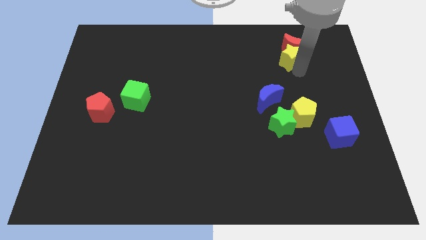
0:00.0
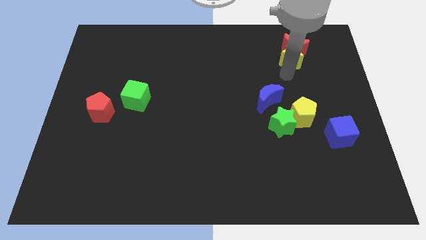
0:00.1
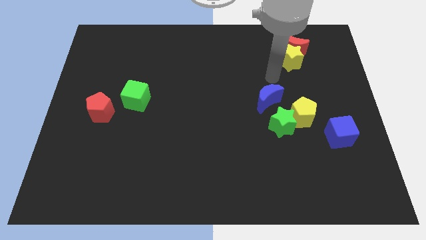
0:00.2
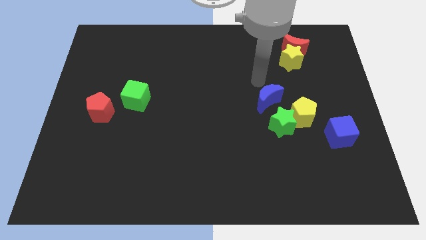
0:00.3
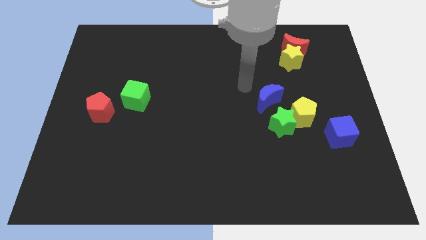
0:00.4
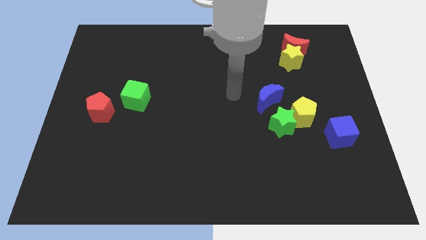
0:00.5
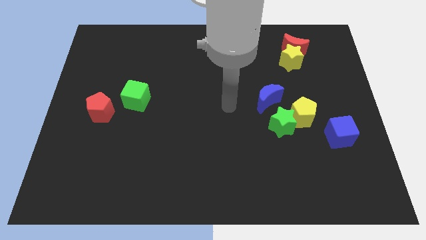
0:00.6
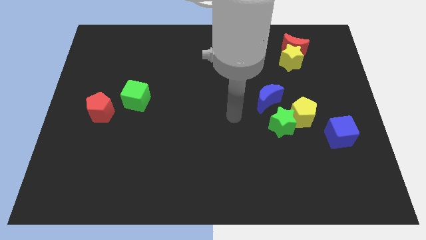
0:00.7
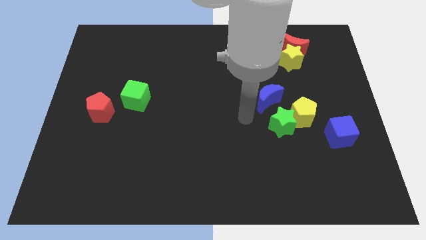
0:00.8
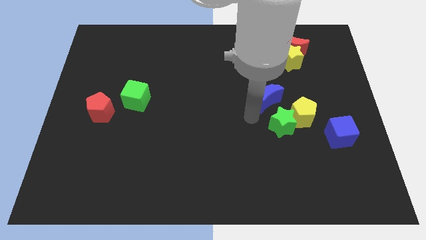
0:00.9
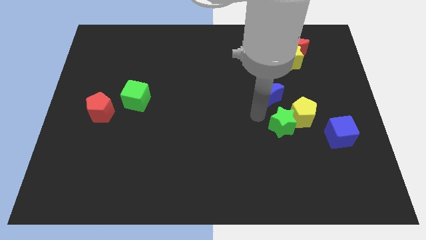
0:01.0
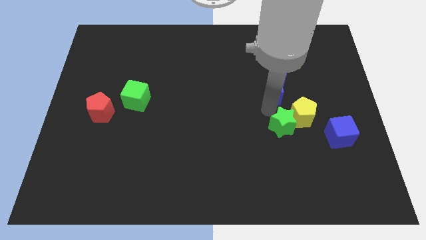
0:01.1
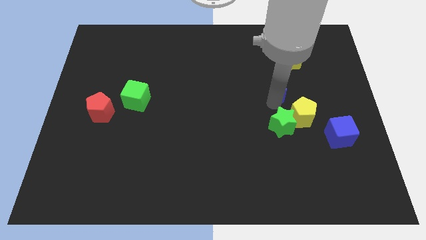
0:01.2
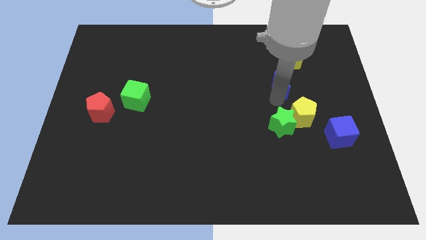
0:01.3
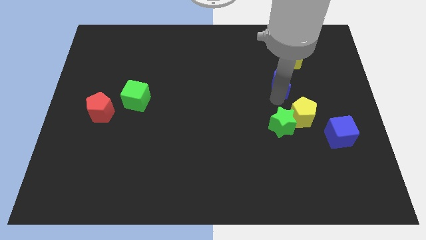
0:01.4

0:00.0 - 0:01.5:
slightly push the blue moon to the bottom side of the yellow star

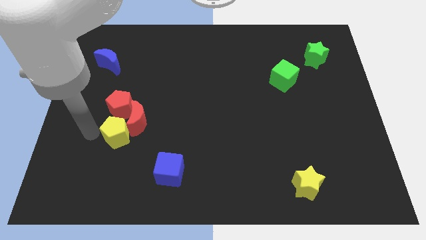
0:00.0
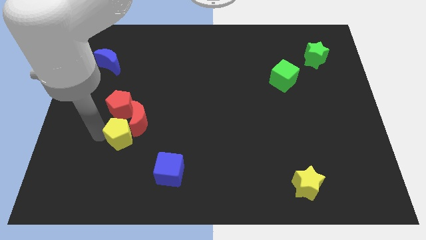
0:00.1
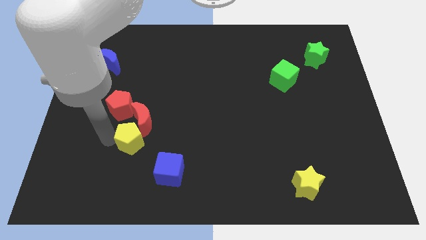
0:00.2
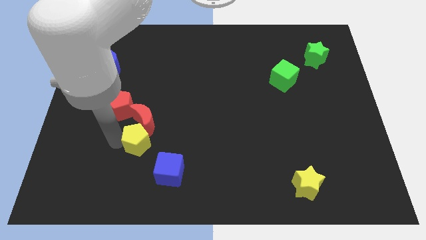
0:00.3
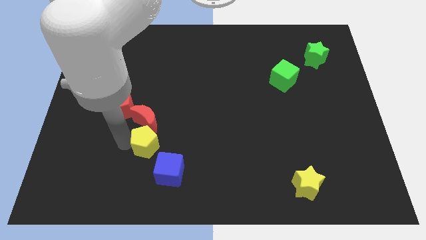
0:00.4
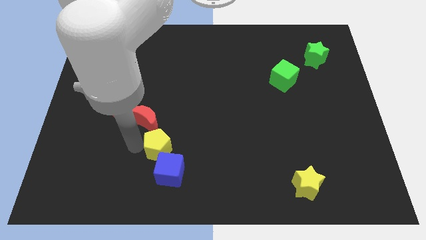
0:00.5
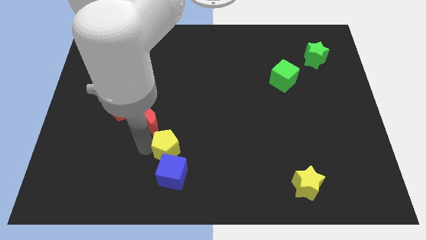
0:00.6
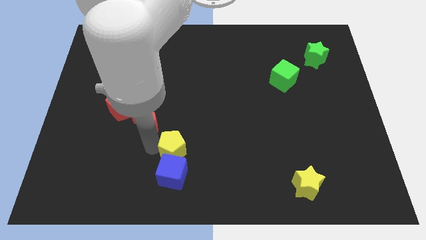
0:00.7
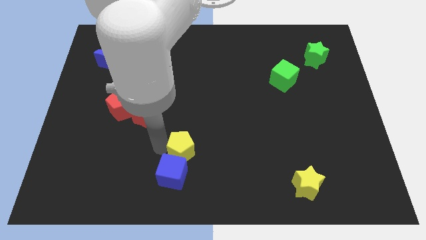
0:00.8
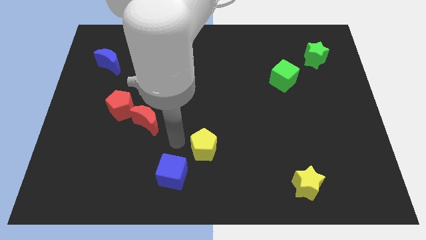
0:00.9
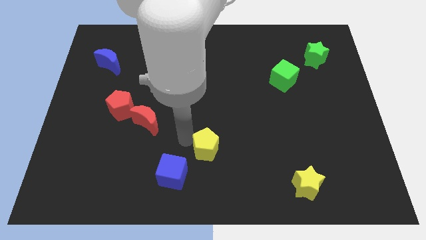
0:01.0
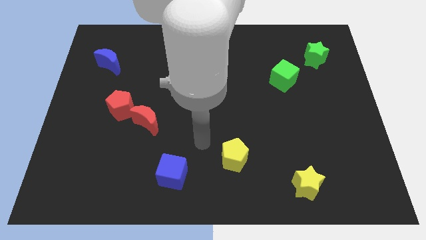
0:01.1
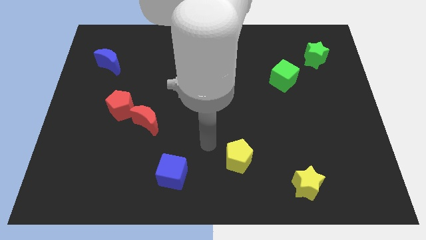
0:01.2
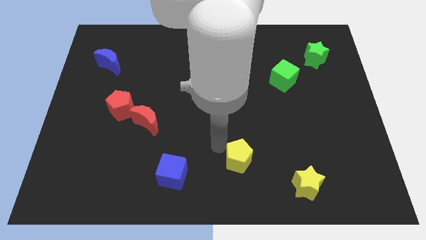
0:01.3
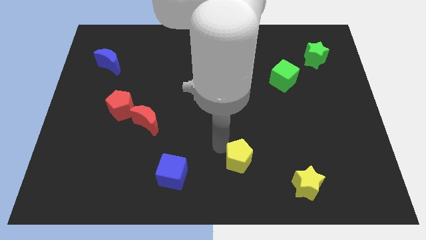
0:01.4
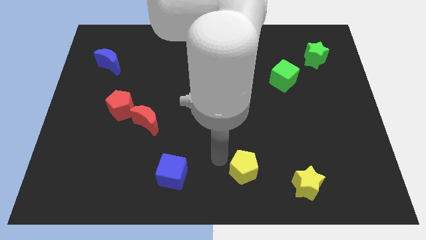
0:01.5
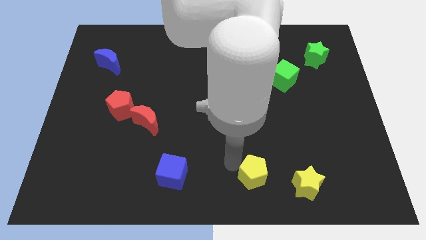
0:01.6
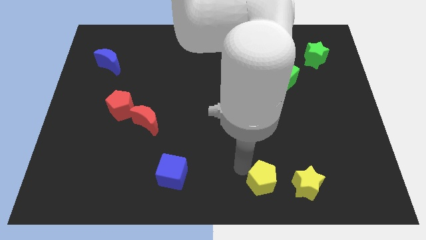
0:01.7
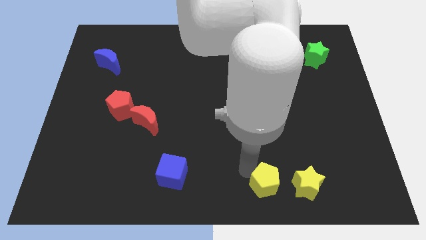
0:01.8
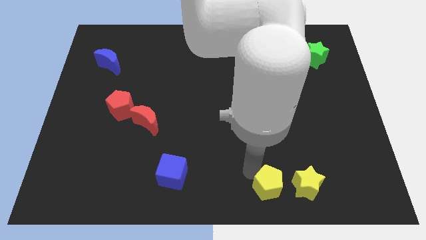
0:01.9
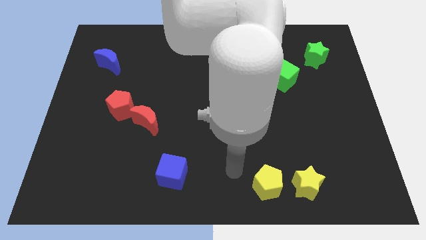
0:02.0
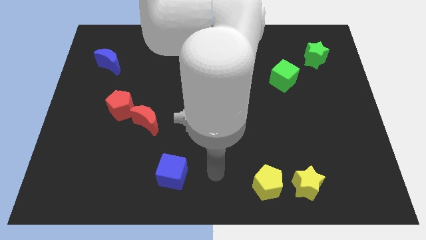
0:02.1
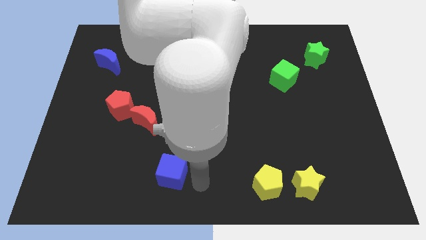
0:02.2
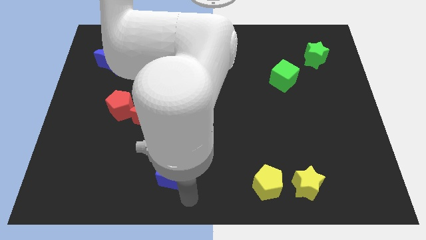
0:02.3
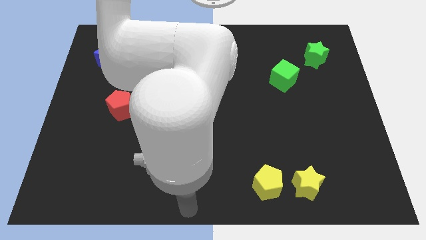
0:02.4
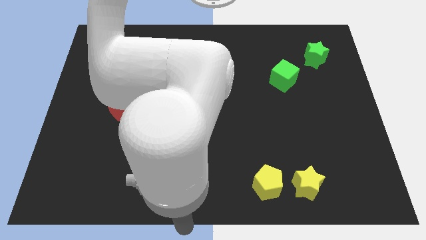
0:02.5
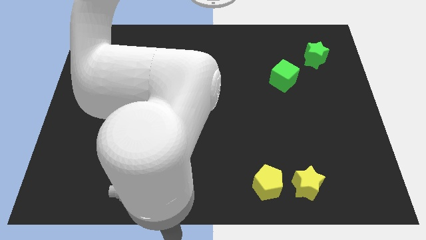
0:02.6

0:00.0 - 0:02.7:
drag the yellow pentagon close to the yellow star

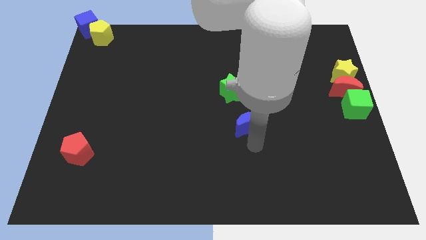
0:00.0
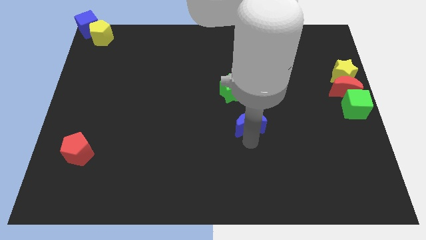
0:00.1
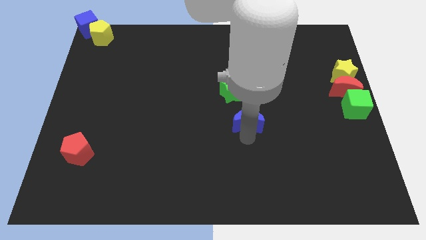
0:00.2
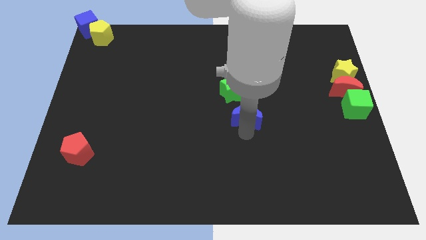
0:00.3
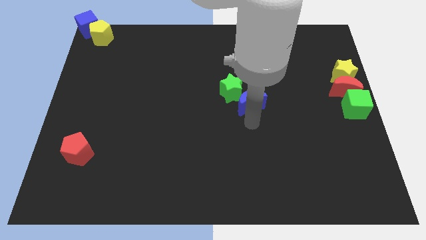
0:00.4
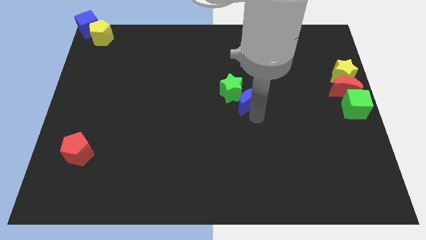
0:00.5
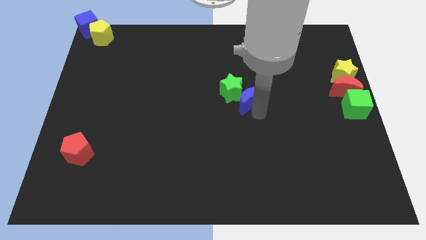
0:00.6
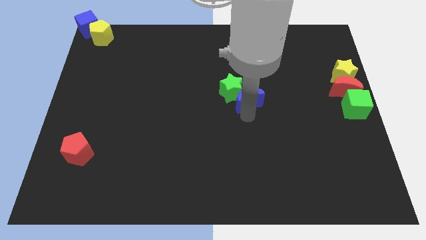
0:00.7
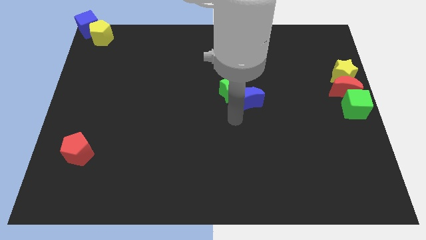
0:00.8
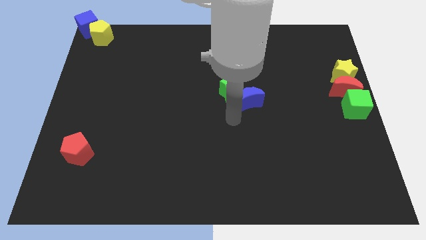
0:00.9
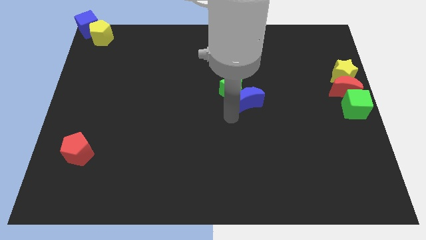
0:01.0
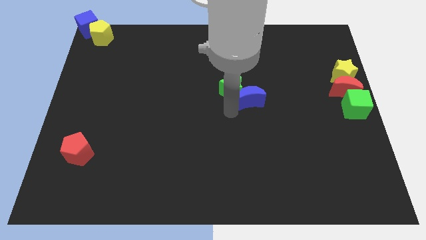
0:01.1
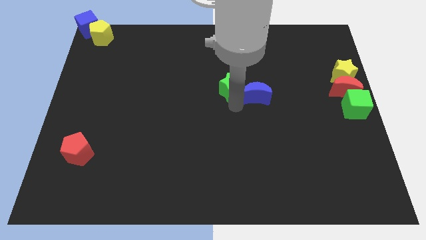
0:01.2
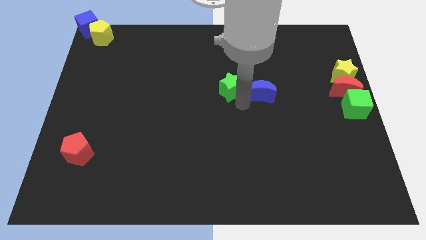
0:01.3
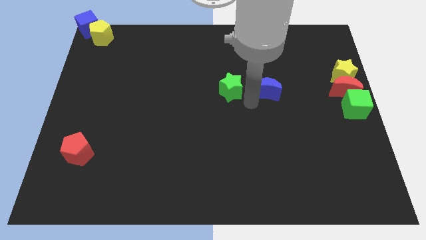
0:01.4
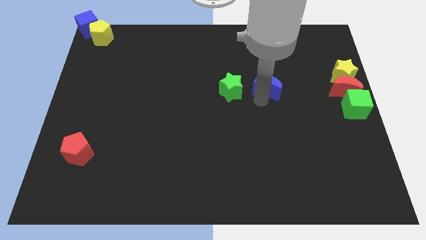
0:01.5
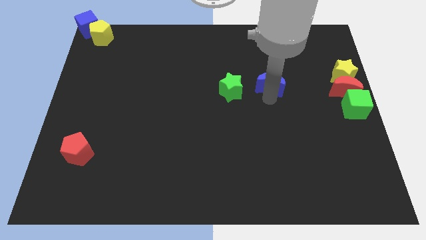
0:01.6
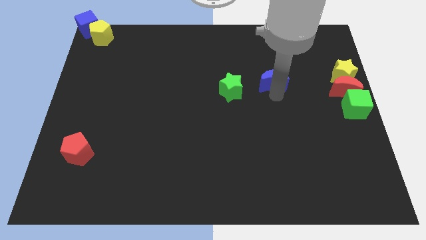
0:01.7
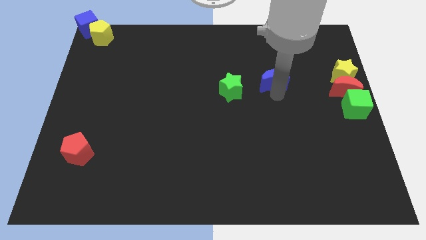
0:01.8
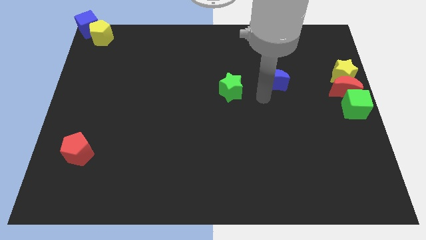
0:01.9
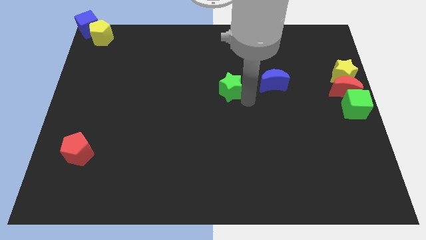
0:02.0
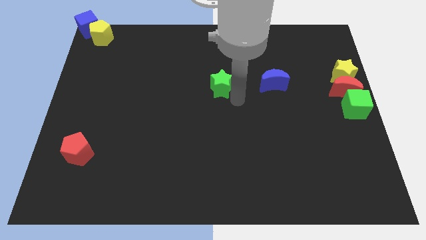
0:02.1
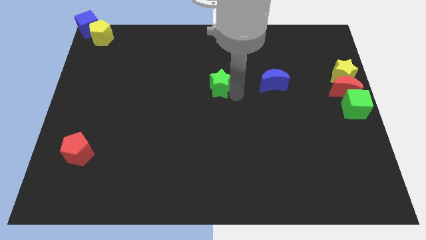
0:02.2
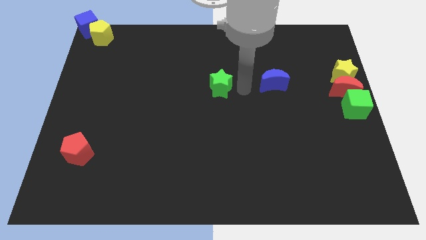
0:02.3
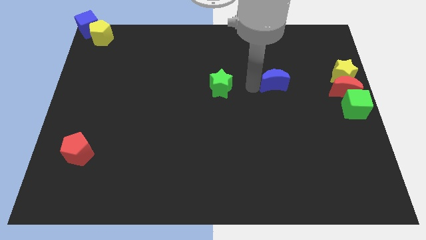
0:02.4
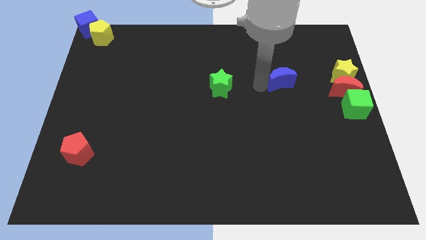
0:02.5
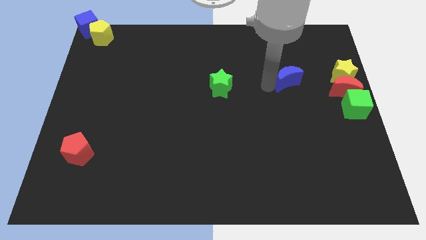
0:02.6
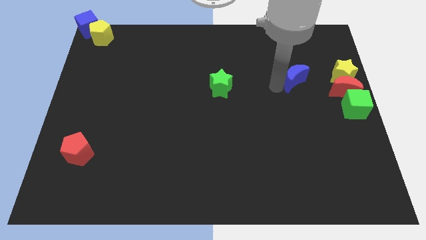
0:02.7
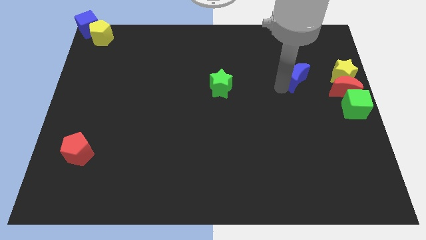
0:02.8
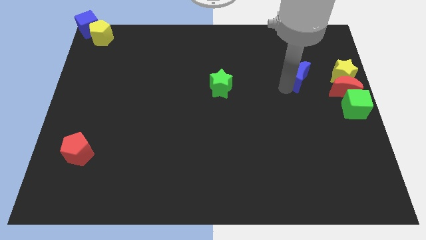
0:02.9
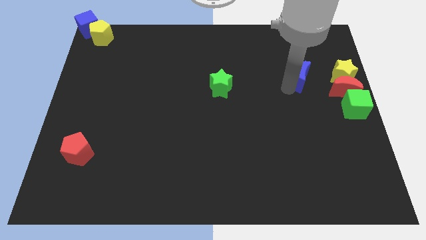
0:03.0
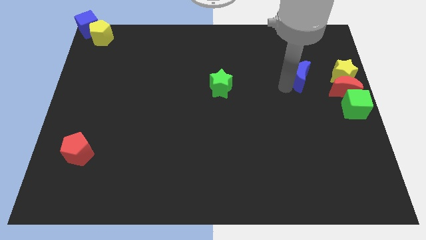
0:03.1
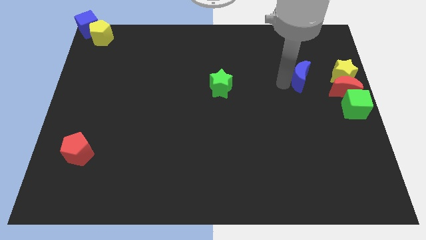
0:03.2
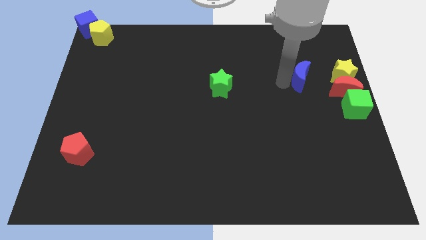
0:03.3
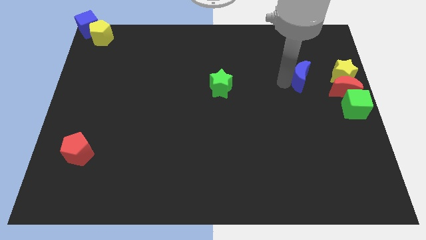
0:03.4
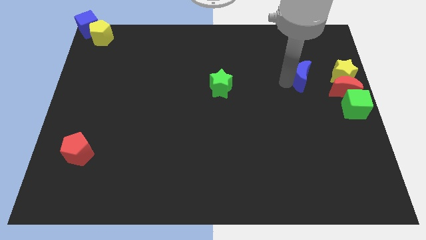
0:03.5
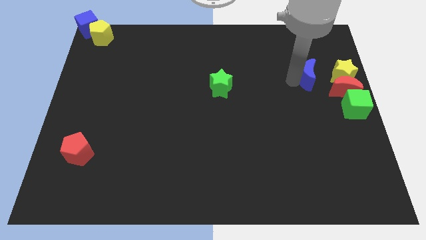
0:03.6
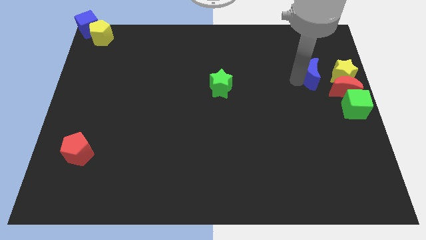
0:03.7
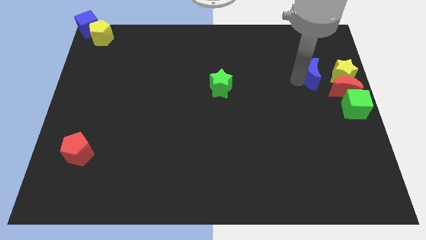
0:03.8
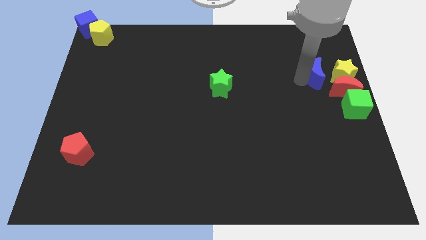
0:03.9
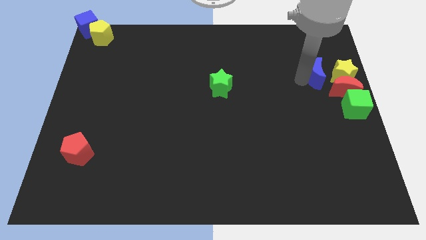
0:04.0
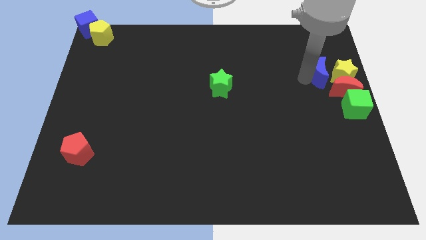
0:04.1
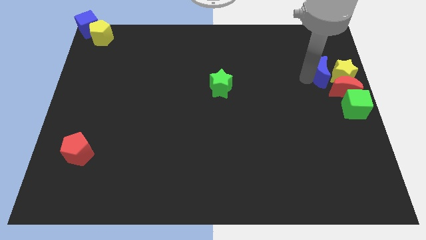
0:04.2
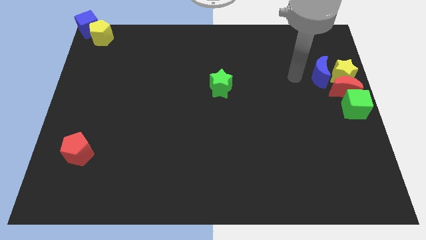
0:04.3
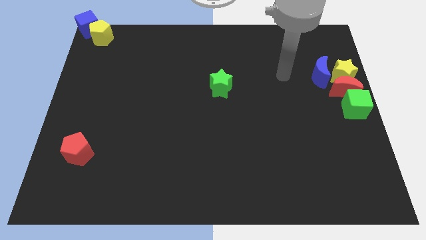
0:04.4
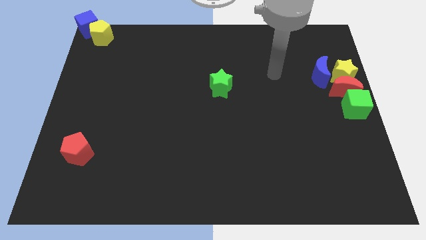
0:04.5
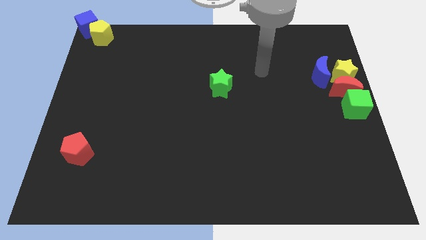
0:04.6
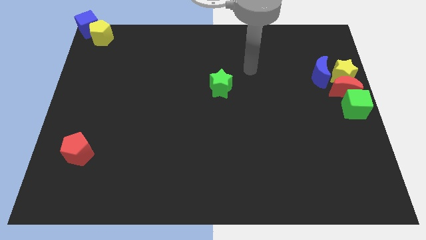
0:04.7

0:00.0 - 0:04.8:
place the blue crescent beside the yellow star
